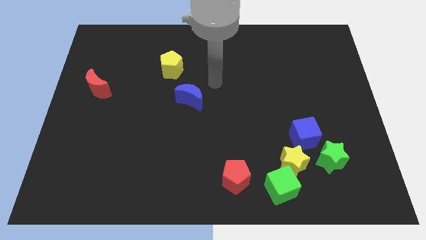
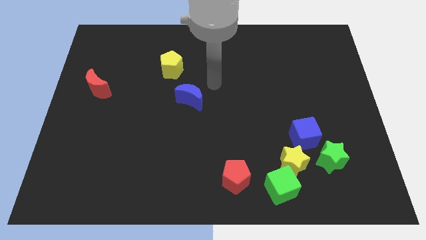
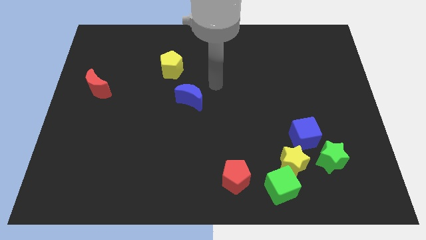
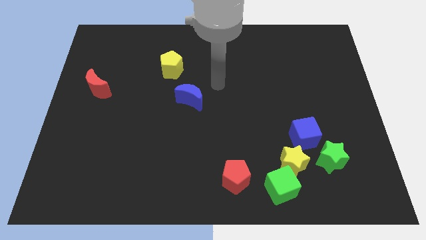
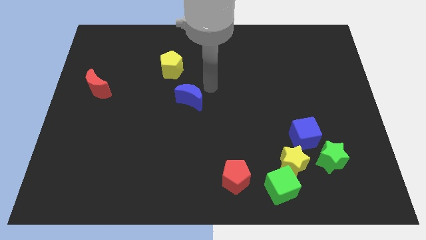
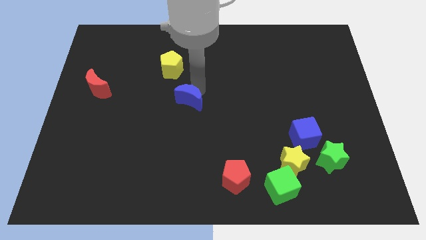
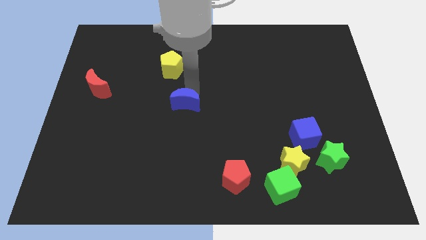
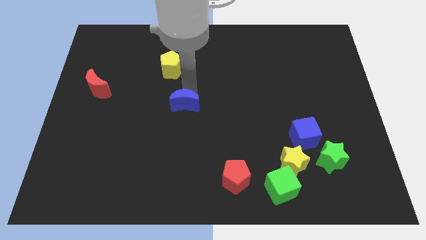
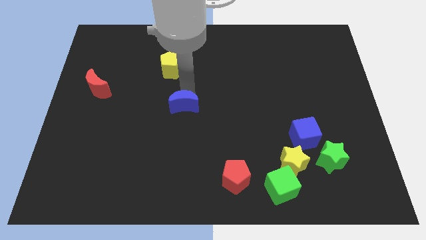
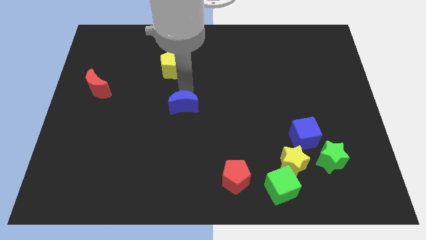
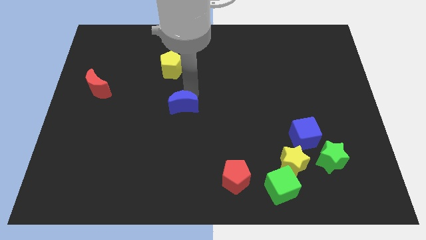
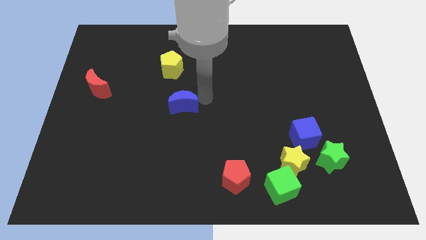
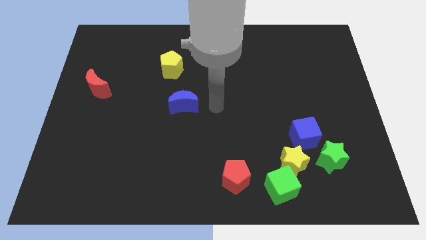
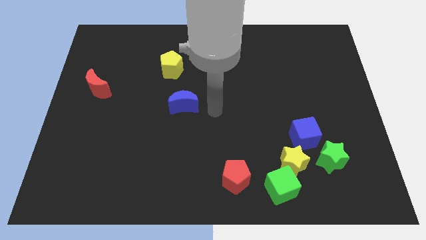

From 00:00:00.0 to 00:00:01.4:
push the blue crescent

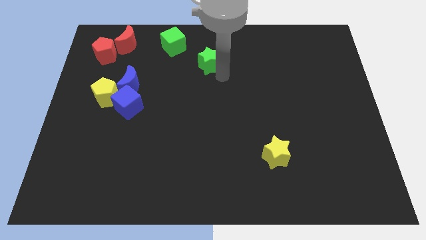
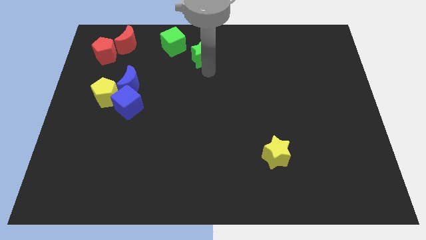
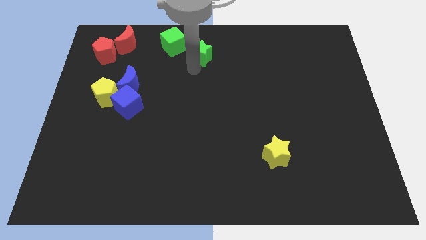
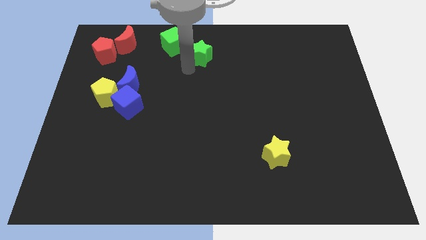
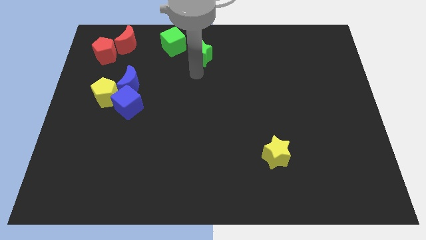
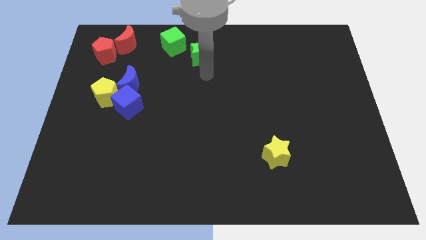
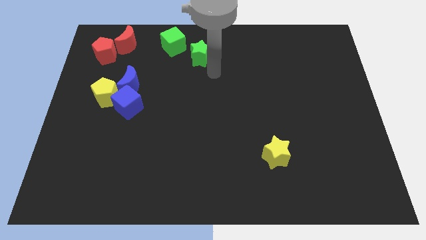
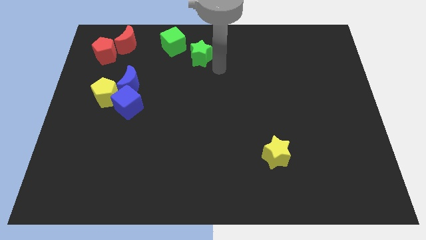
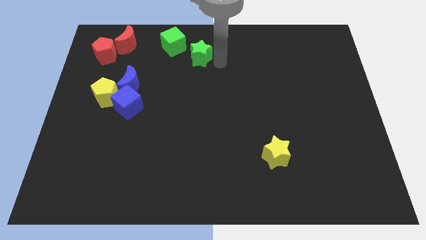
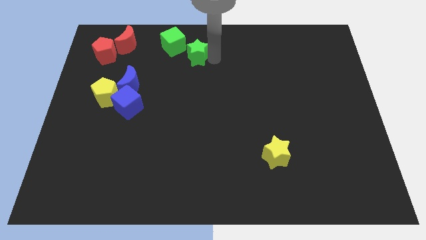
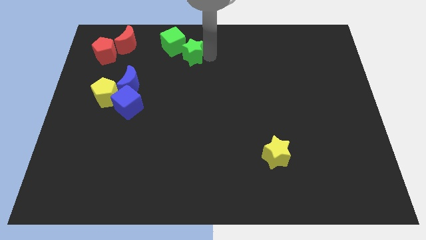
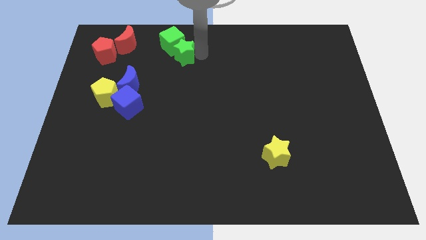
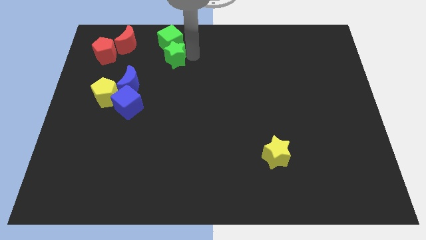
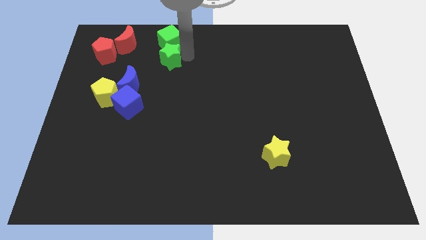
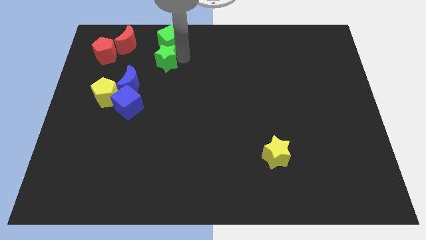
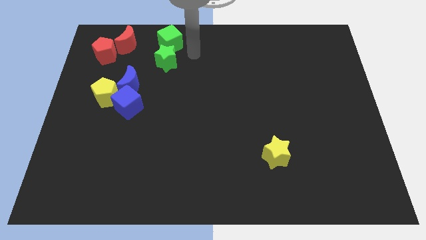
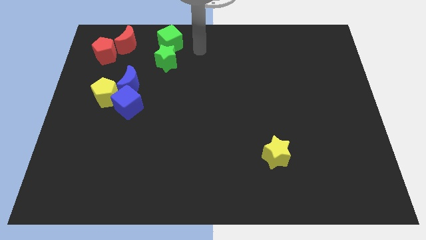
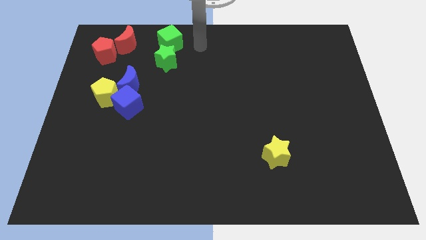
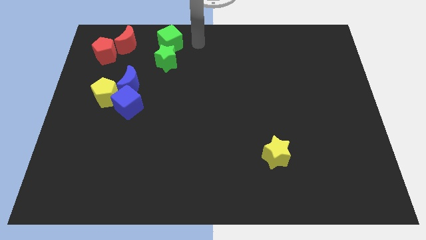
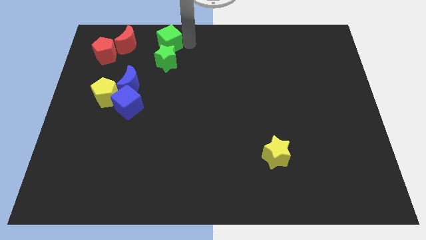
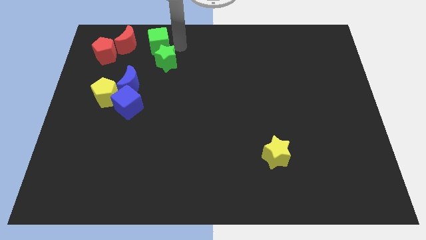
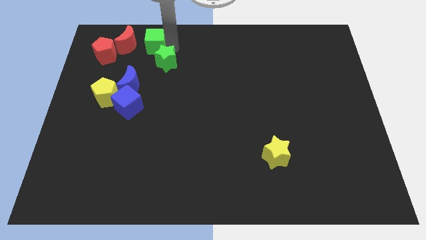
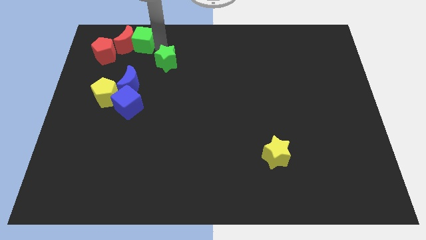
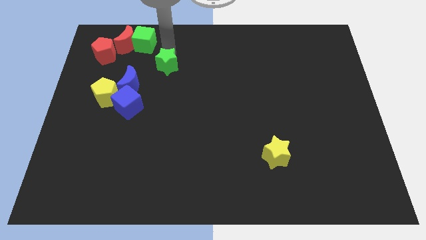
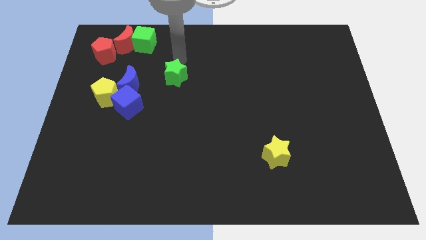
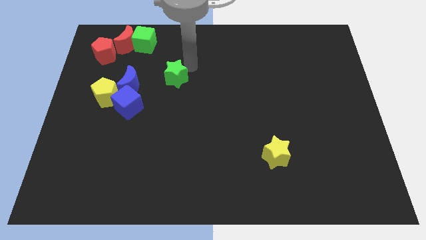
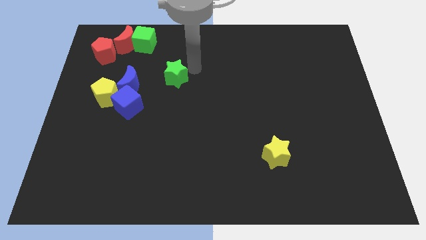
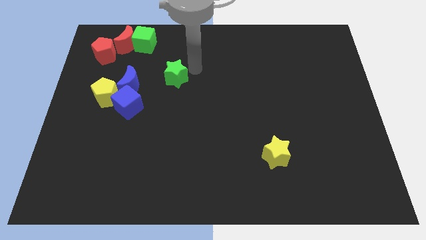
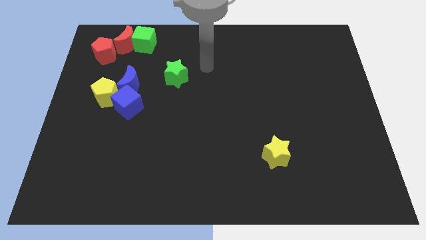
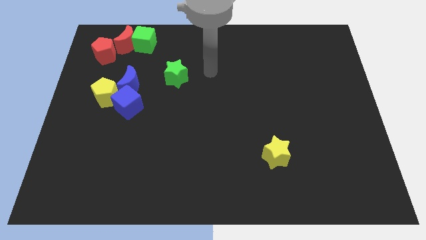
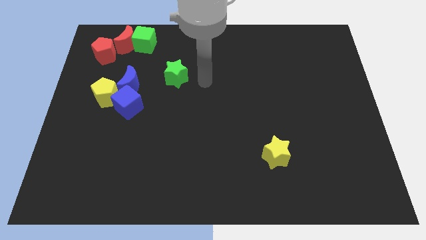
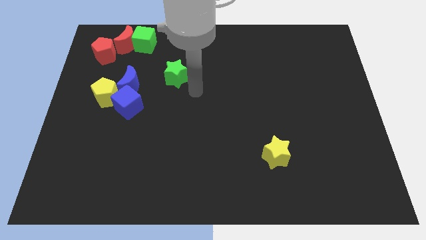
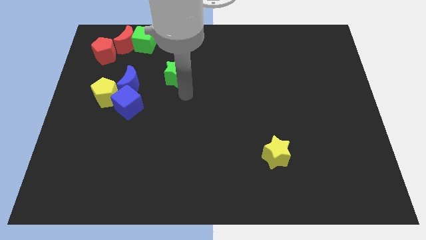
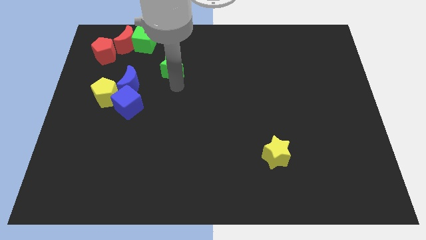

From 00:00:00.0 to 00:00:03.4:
place the green star right to the blue moon

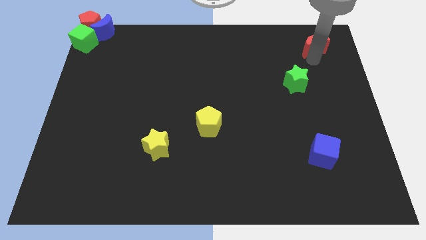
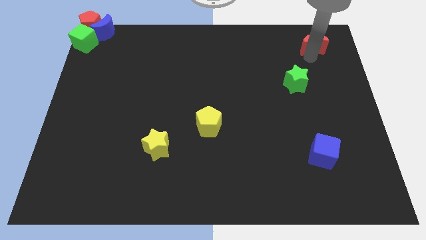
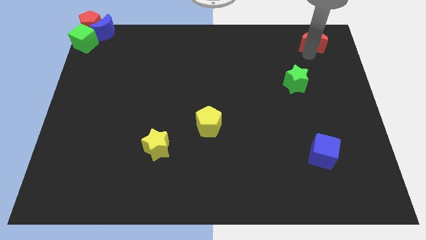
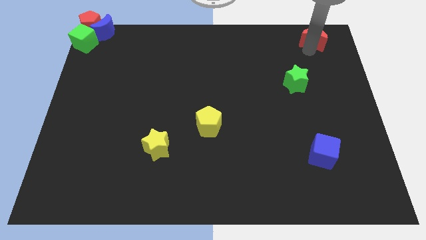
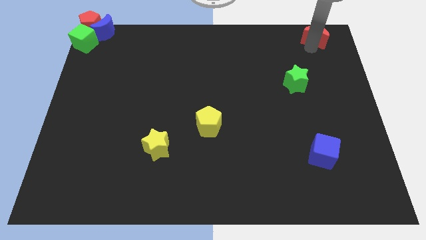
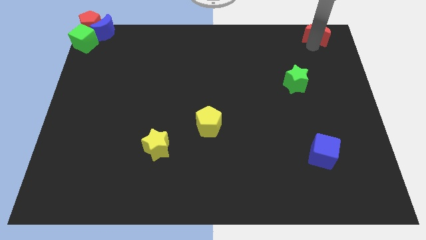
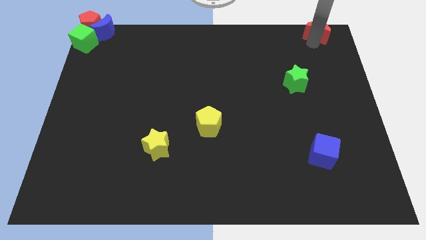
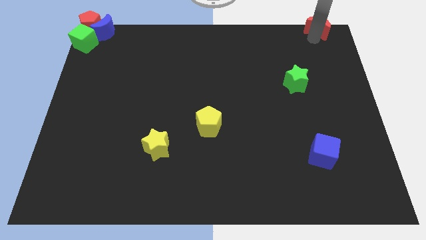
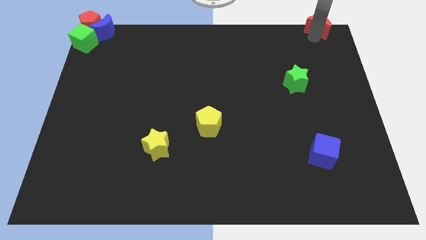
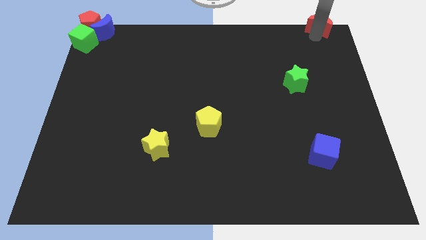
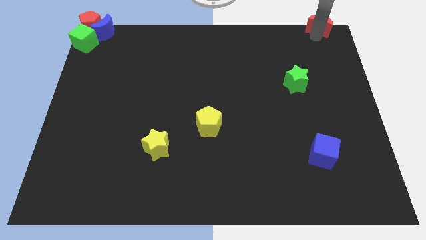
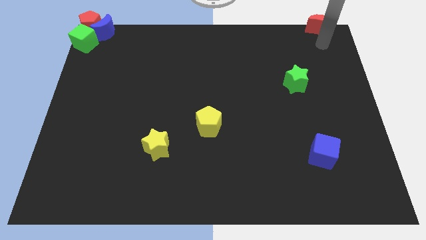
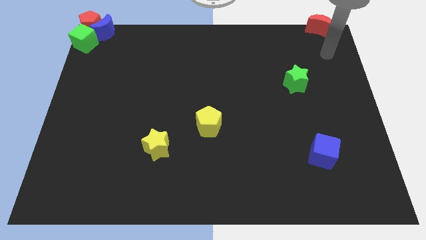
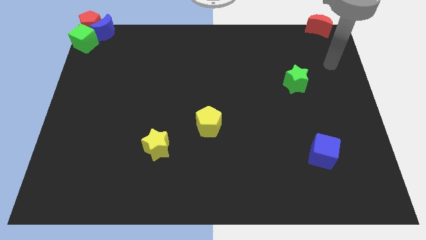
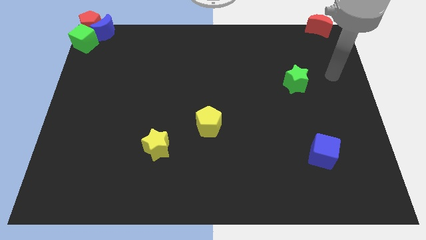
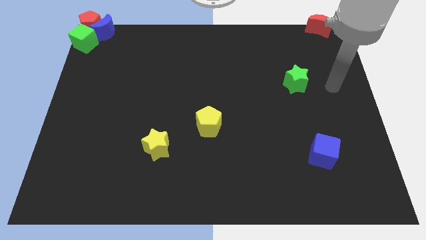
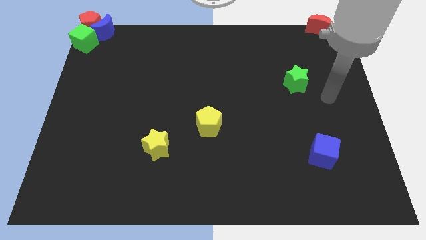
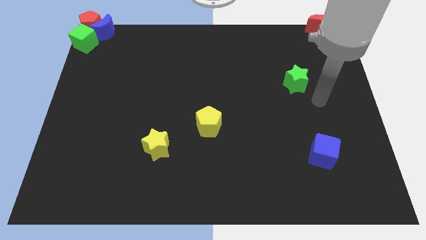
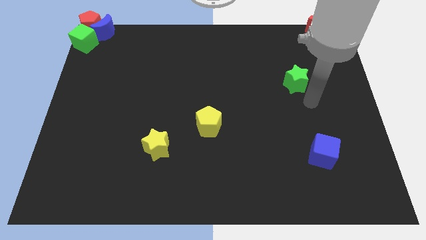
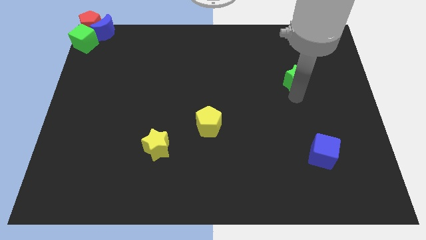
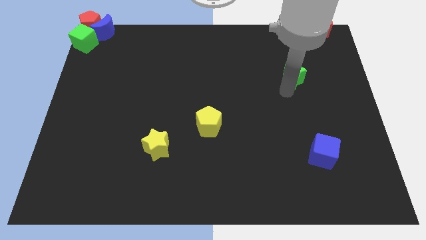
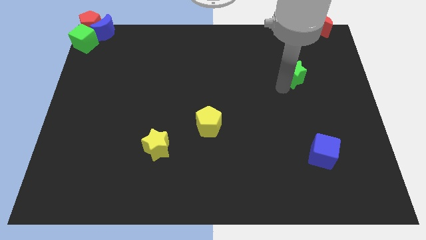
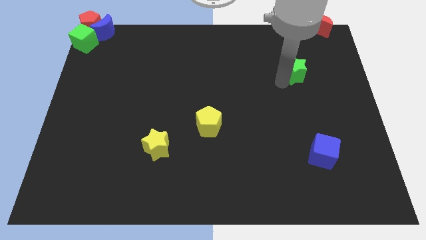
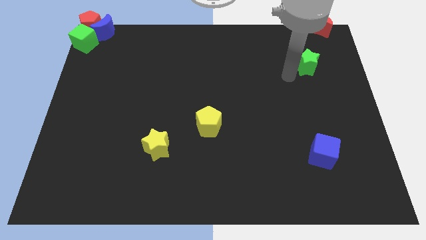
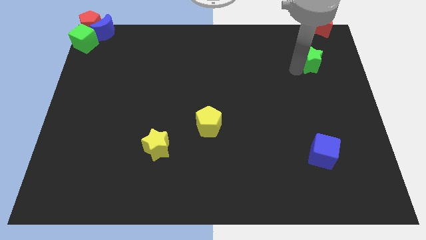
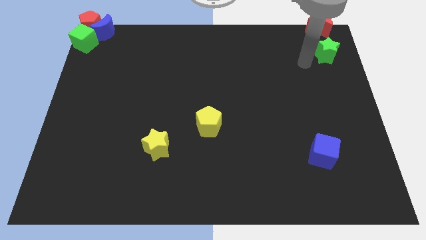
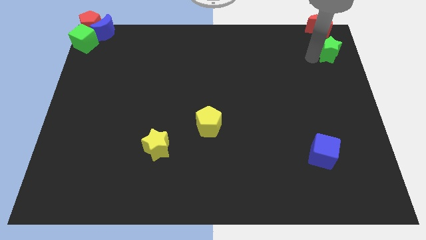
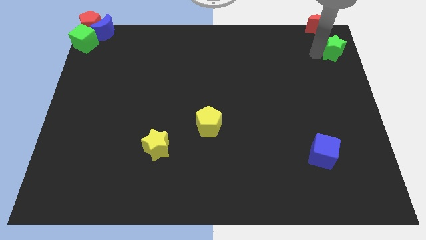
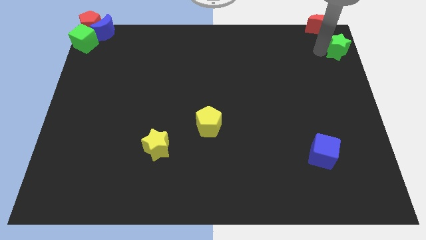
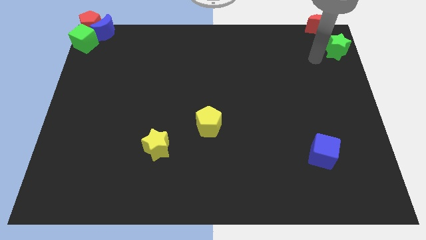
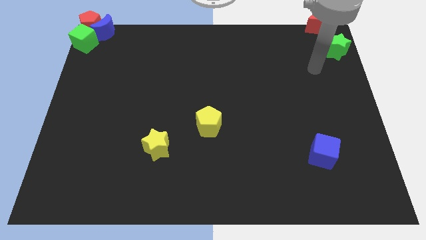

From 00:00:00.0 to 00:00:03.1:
move green star at the top right

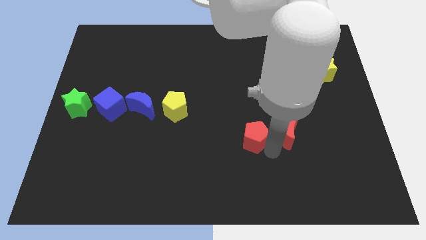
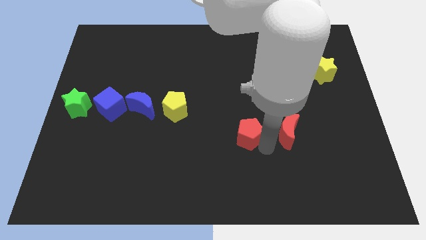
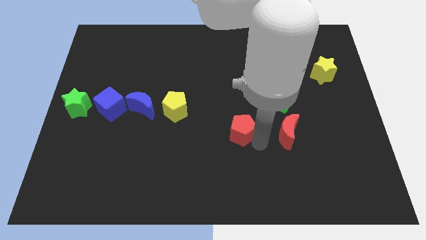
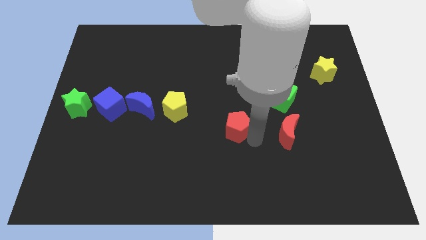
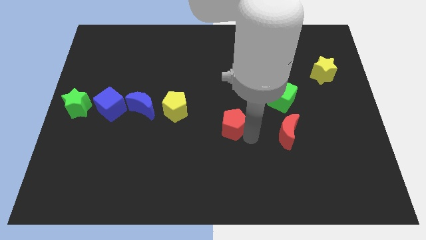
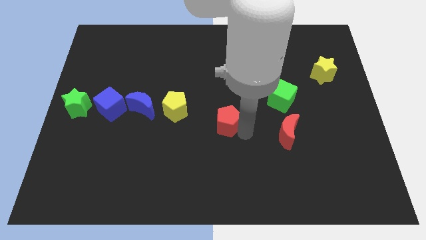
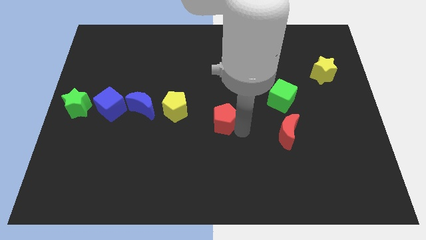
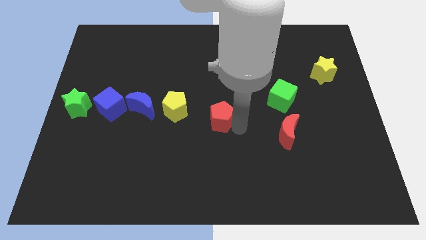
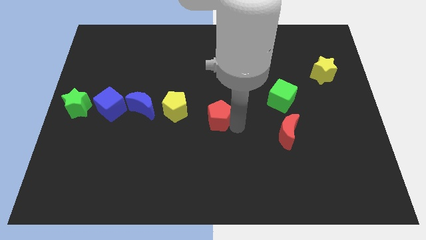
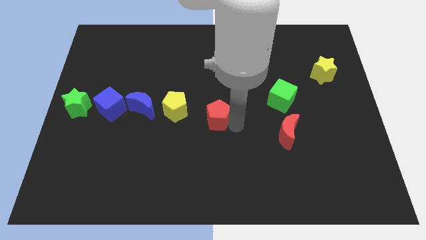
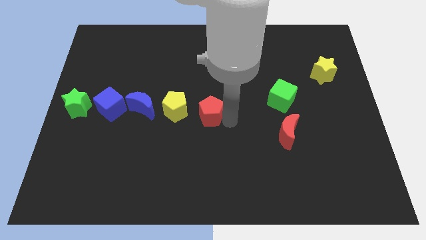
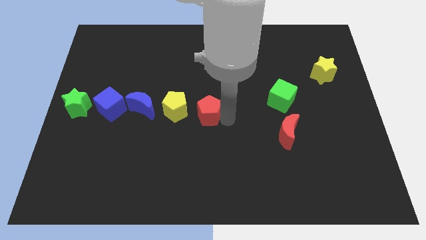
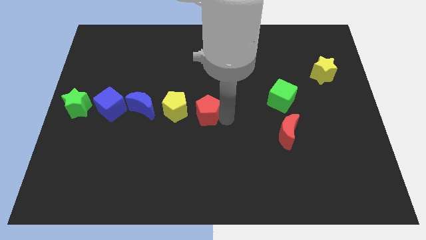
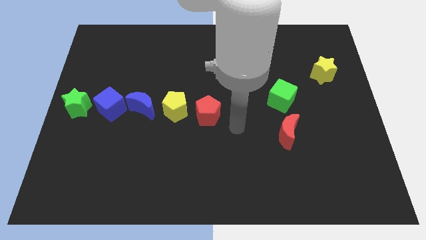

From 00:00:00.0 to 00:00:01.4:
place the red pentagon to the right side of the yellow pentagon
